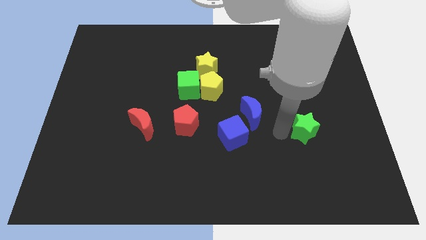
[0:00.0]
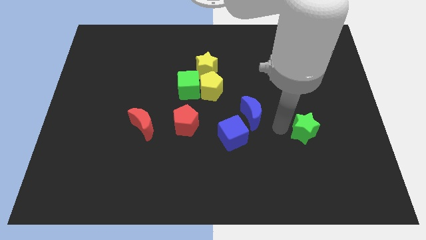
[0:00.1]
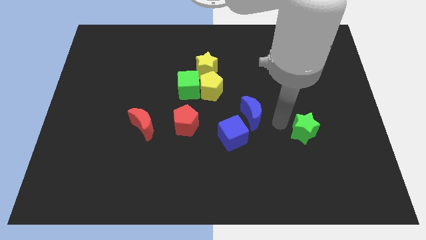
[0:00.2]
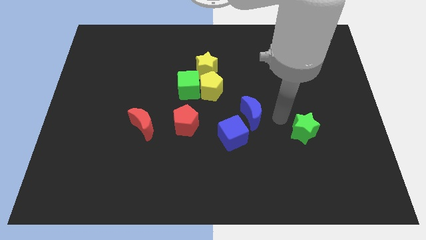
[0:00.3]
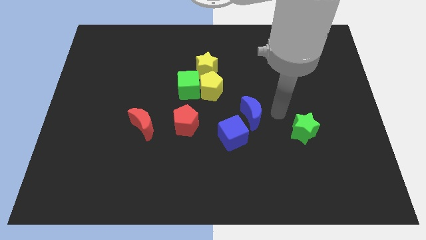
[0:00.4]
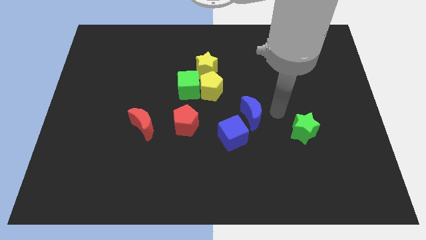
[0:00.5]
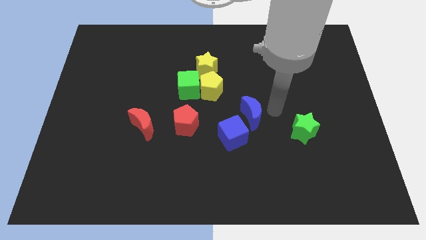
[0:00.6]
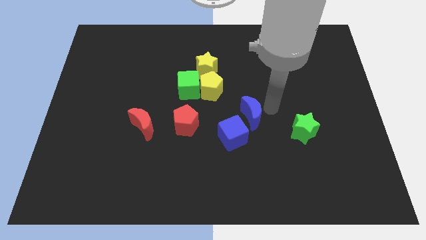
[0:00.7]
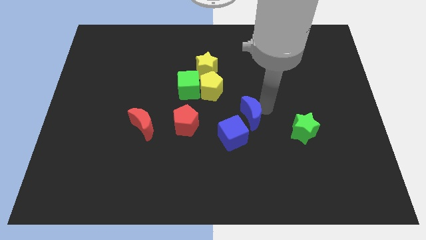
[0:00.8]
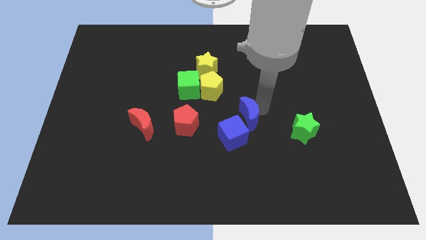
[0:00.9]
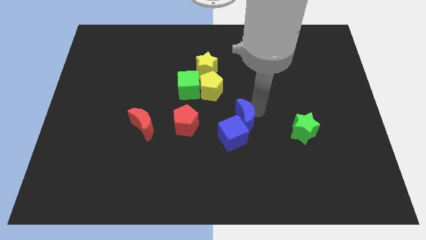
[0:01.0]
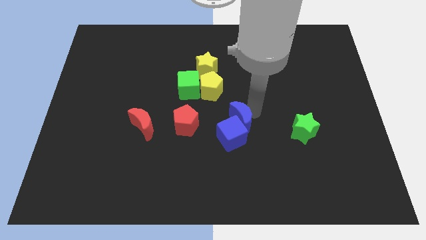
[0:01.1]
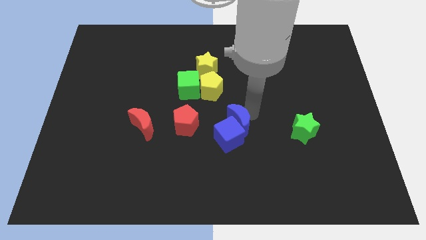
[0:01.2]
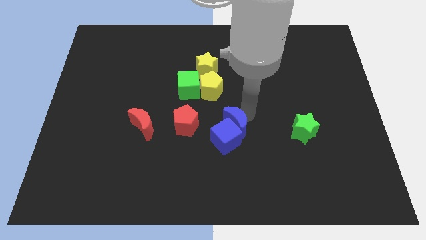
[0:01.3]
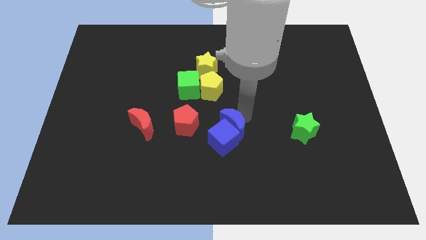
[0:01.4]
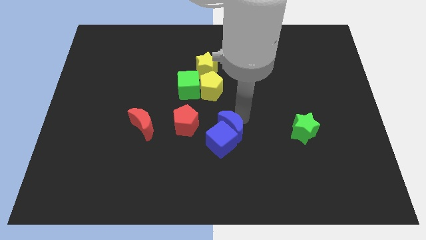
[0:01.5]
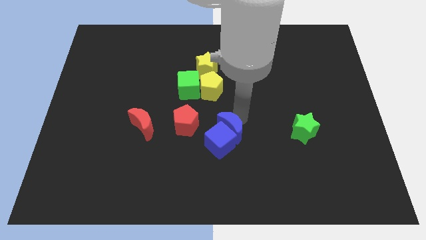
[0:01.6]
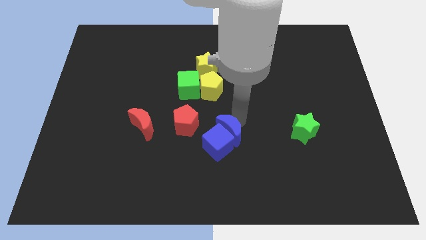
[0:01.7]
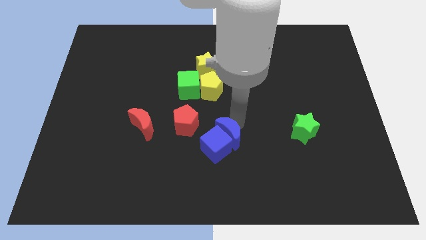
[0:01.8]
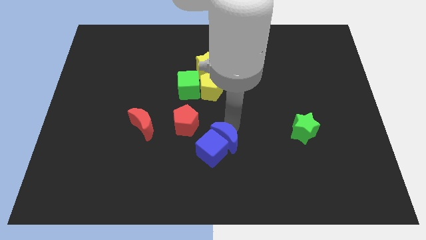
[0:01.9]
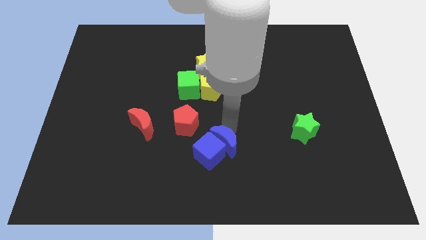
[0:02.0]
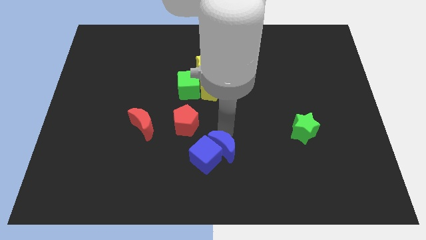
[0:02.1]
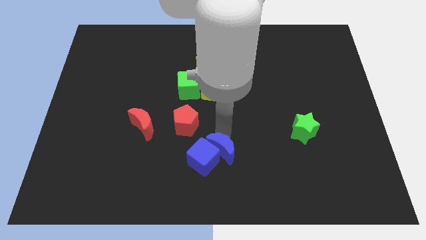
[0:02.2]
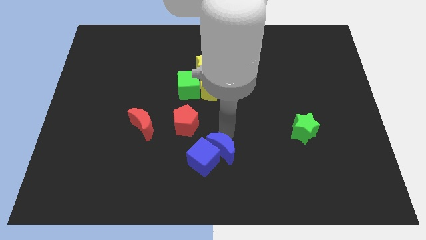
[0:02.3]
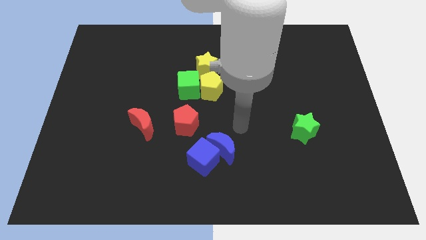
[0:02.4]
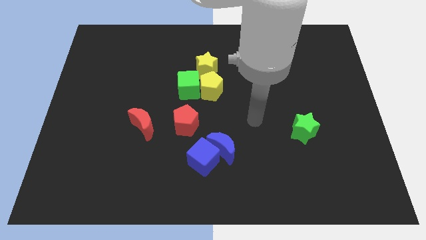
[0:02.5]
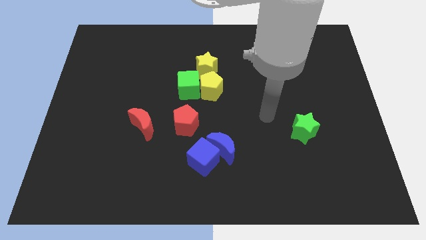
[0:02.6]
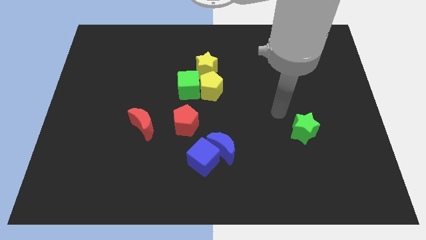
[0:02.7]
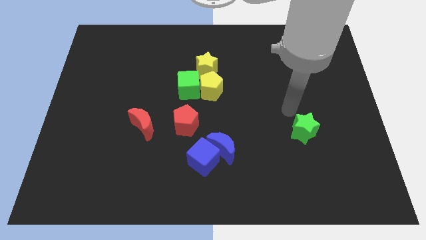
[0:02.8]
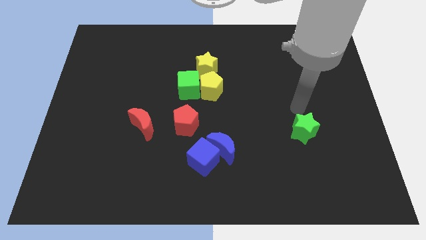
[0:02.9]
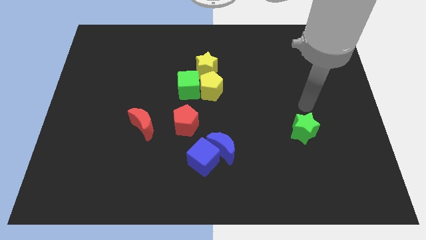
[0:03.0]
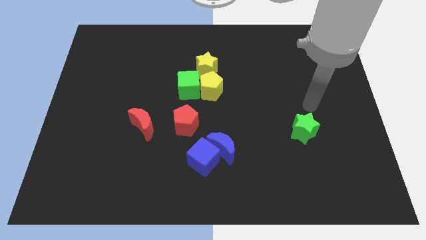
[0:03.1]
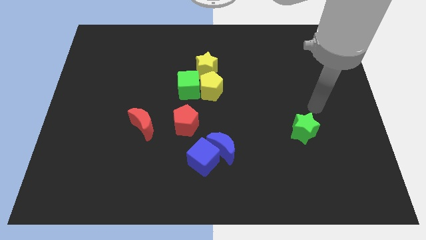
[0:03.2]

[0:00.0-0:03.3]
push the blue cubes towards the bottom centre of the board

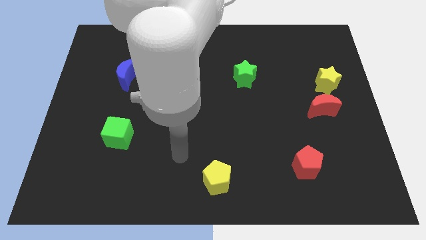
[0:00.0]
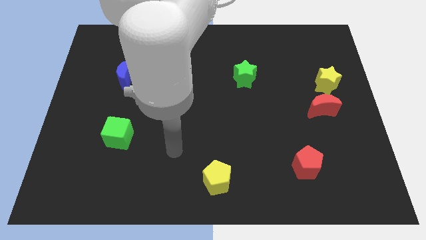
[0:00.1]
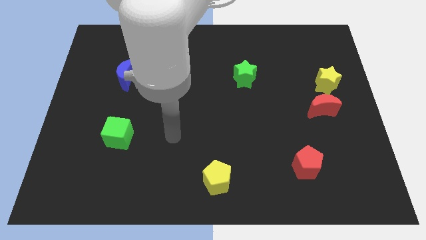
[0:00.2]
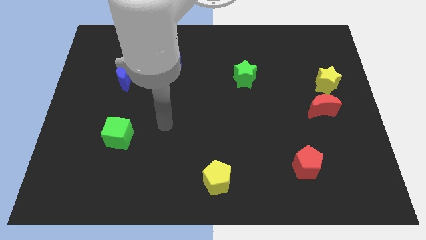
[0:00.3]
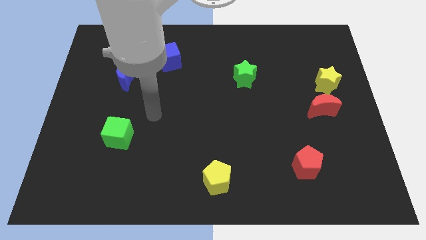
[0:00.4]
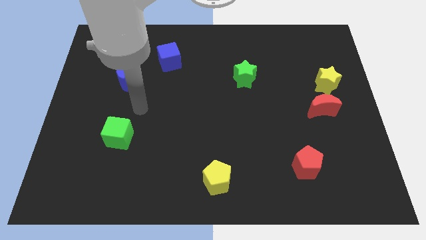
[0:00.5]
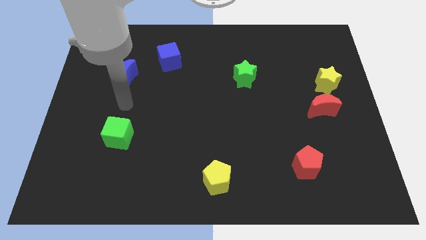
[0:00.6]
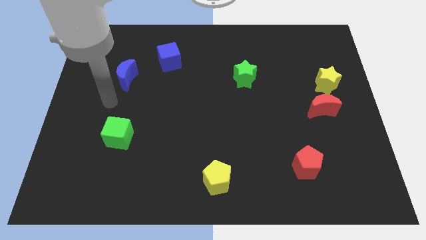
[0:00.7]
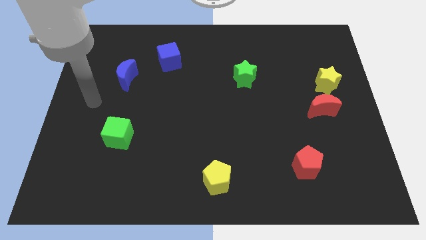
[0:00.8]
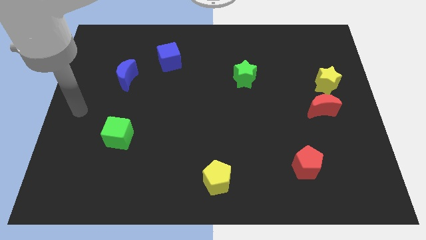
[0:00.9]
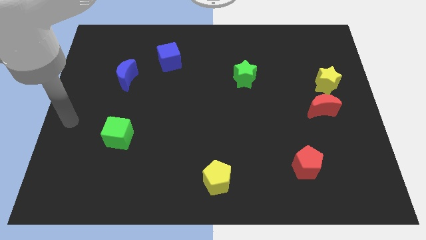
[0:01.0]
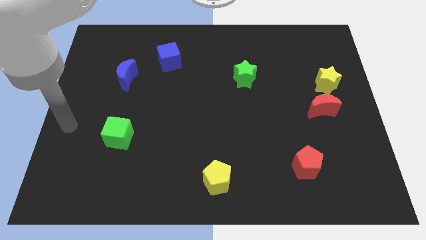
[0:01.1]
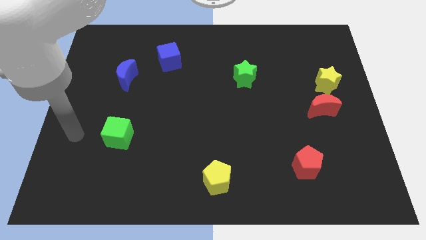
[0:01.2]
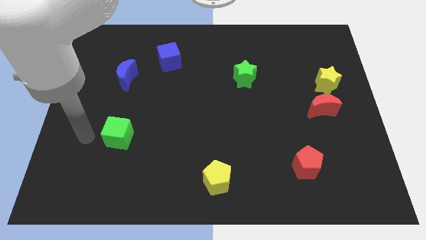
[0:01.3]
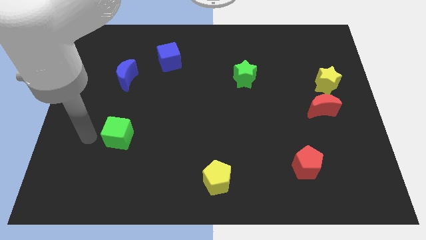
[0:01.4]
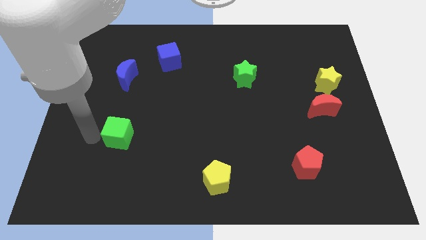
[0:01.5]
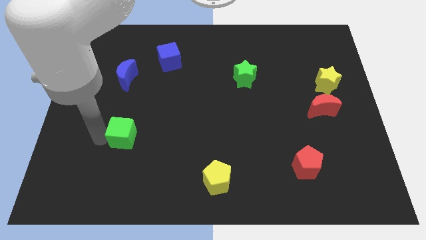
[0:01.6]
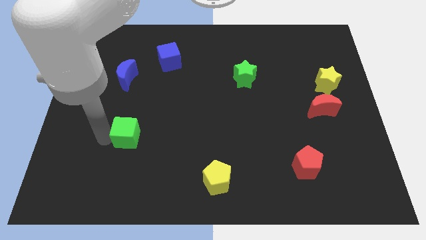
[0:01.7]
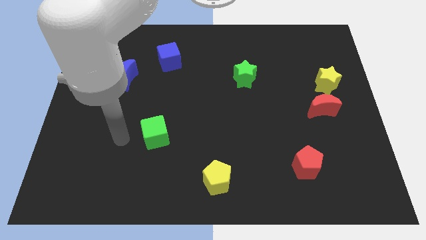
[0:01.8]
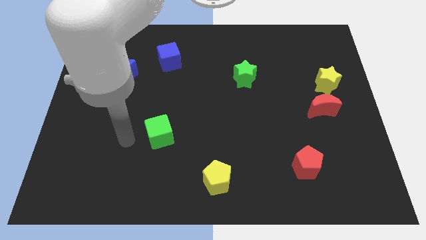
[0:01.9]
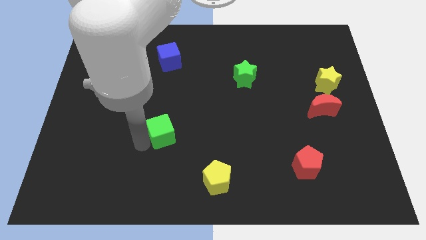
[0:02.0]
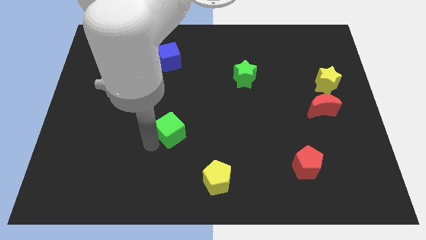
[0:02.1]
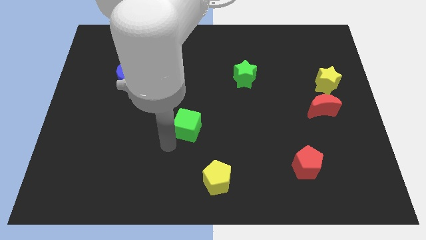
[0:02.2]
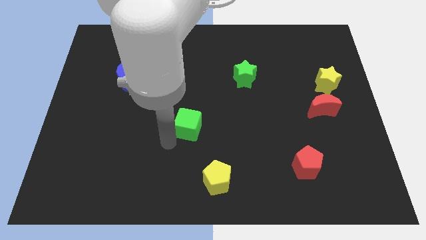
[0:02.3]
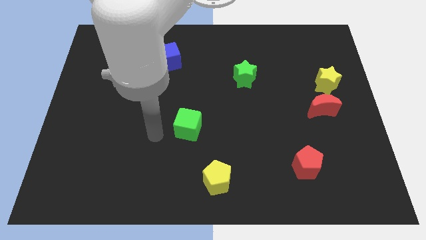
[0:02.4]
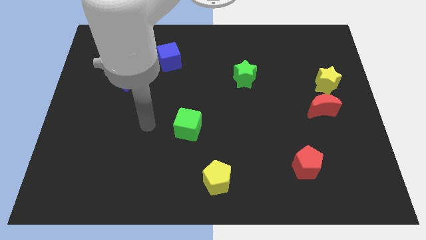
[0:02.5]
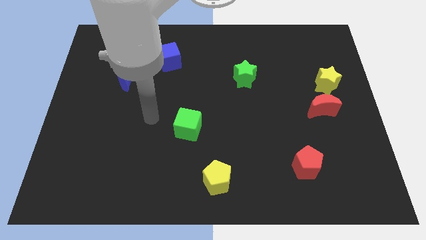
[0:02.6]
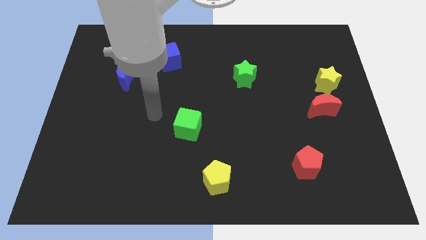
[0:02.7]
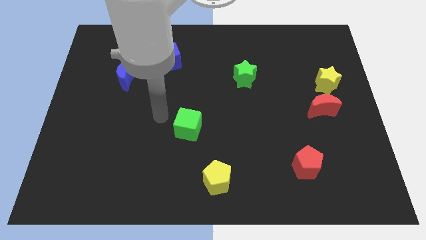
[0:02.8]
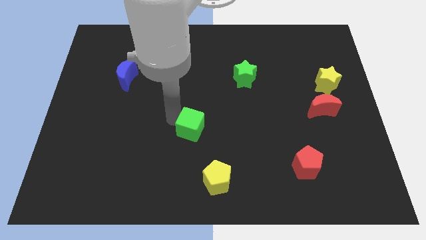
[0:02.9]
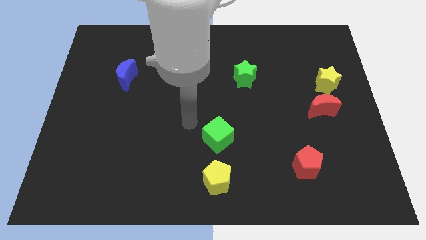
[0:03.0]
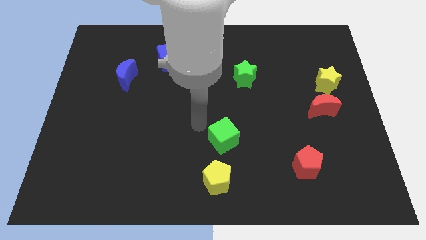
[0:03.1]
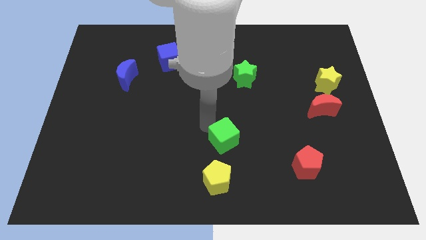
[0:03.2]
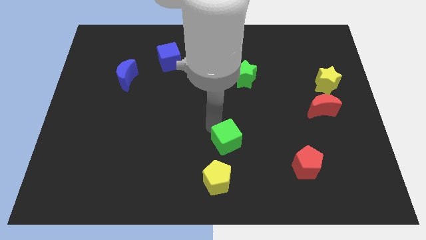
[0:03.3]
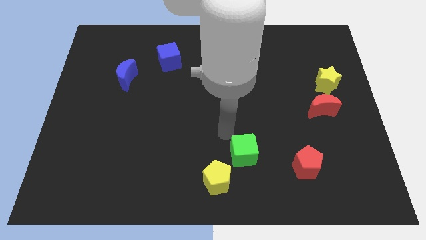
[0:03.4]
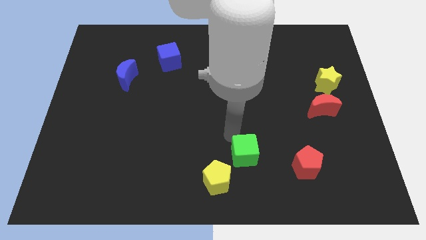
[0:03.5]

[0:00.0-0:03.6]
place green cube in between the yellow pentagon and red pentagon

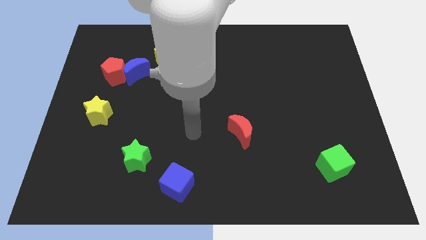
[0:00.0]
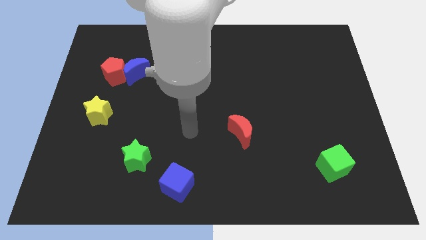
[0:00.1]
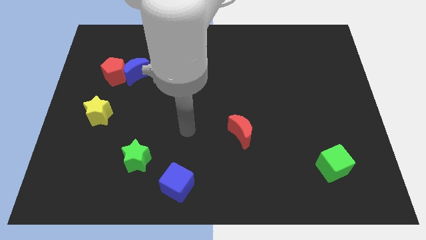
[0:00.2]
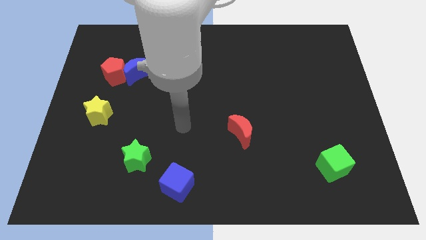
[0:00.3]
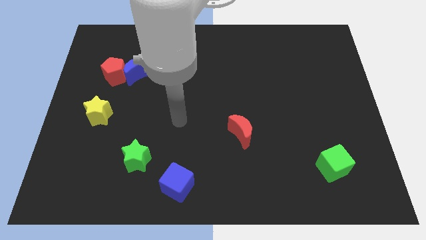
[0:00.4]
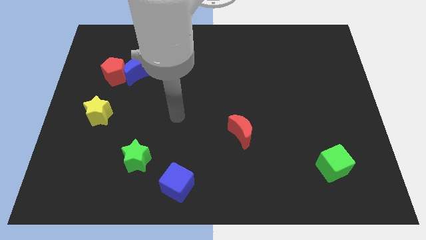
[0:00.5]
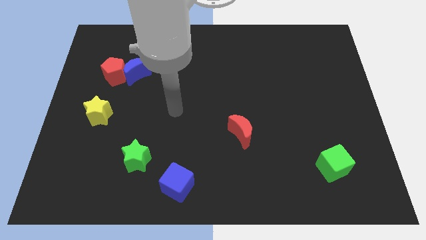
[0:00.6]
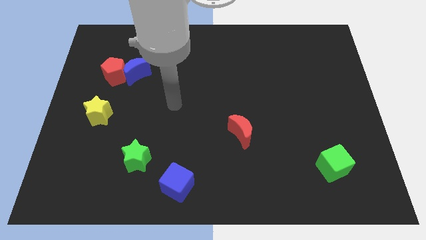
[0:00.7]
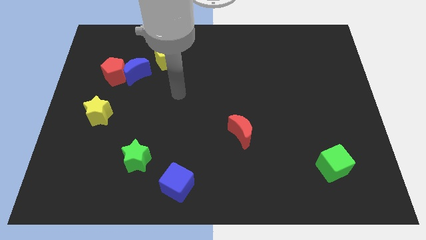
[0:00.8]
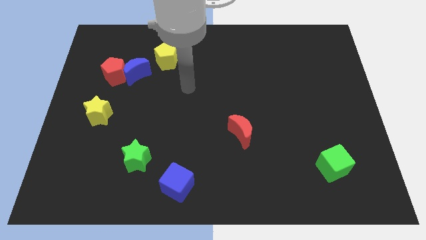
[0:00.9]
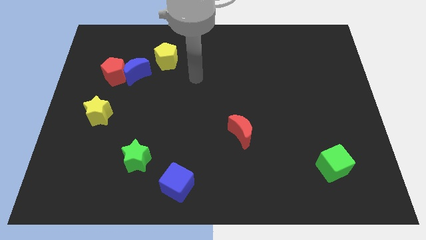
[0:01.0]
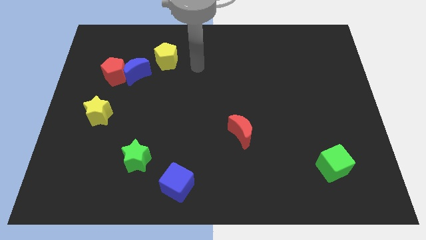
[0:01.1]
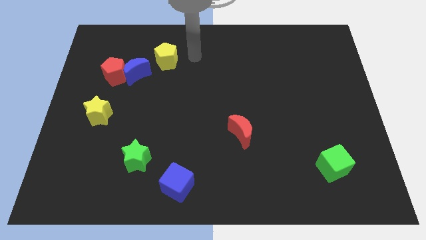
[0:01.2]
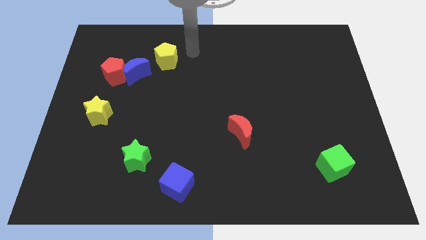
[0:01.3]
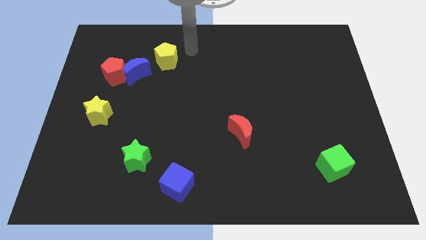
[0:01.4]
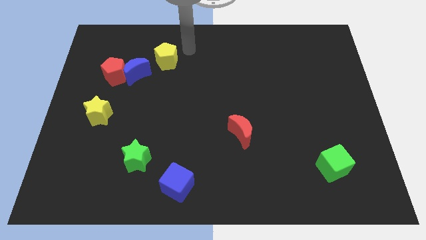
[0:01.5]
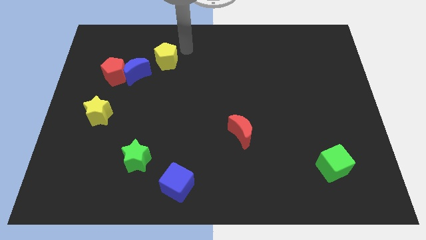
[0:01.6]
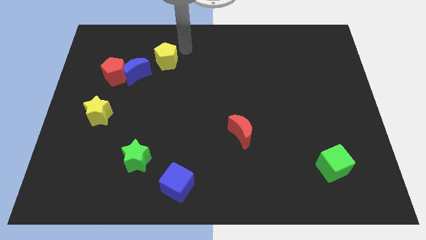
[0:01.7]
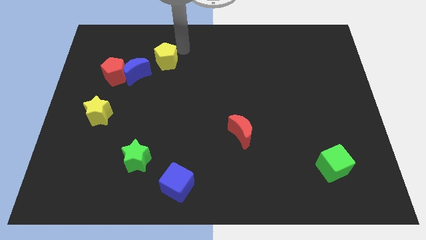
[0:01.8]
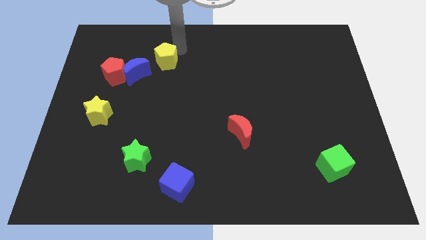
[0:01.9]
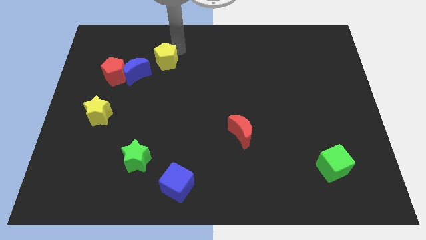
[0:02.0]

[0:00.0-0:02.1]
move your hand close to the yellow pentagon
